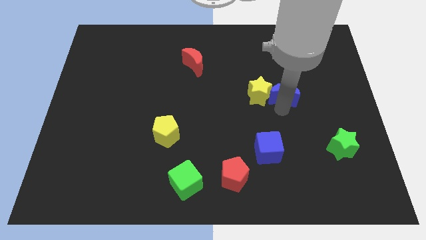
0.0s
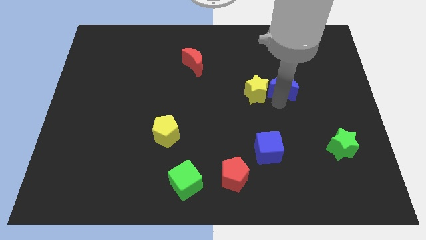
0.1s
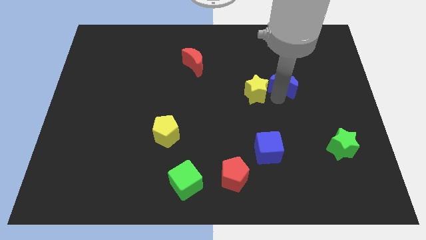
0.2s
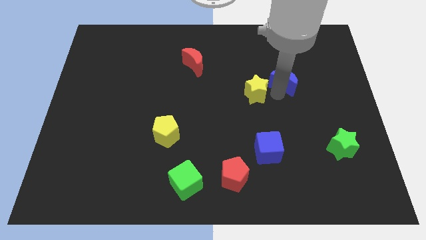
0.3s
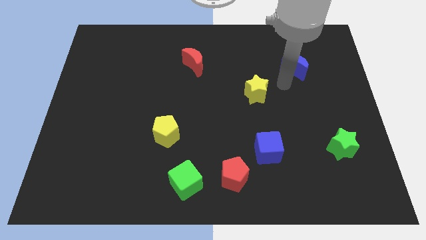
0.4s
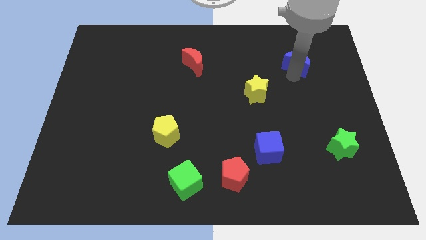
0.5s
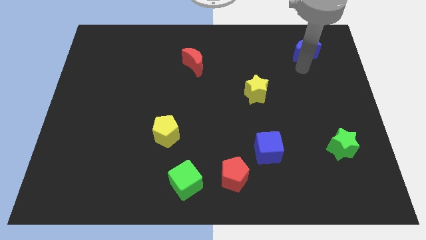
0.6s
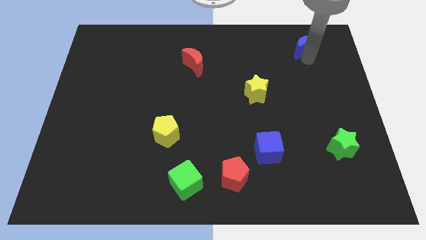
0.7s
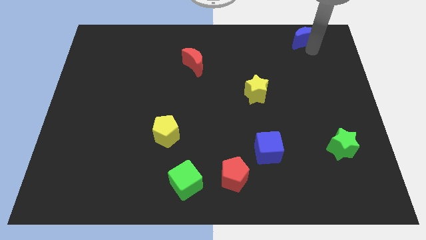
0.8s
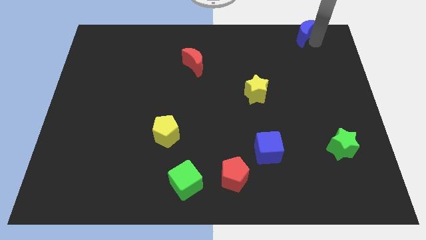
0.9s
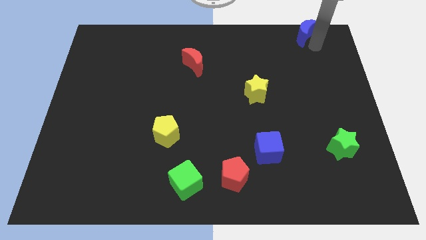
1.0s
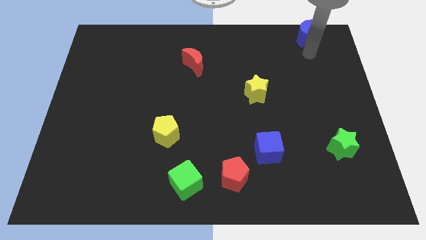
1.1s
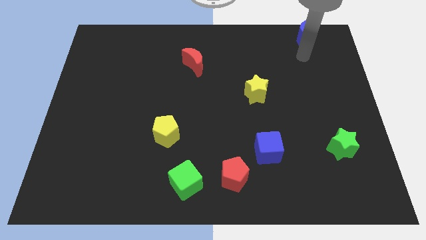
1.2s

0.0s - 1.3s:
move the blue crescent to the top right of the yellow star

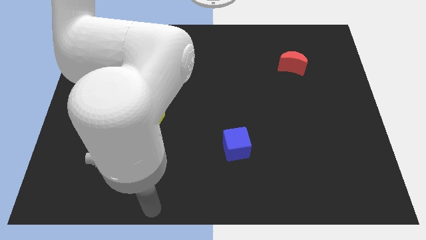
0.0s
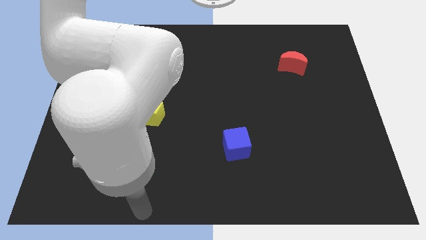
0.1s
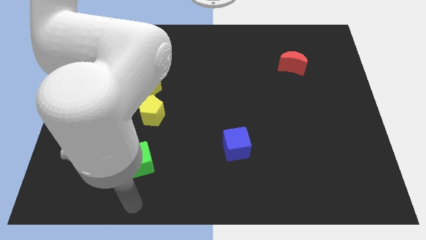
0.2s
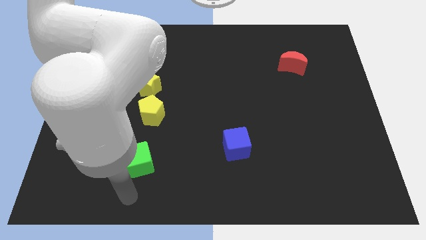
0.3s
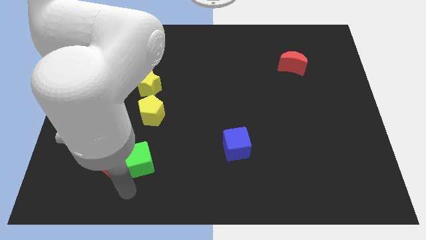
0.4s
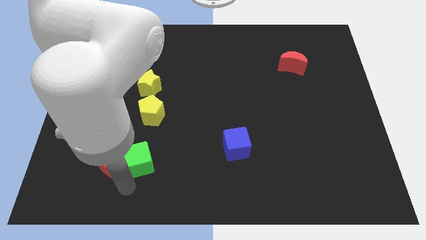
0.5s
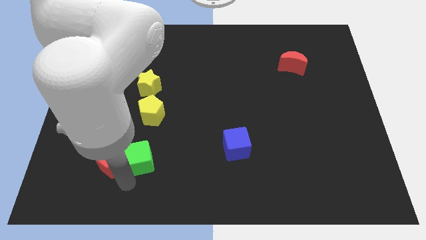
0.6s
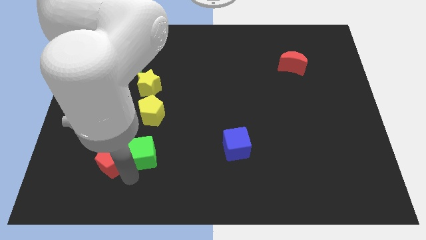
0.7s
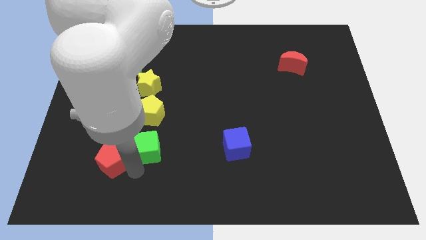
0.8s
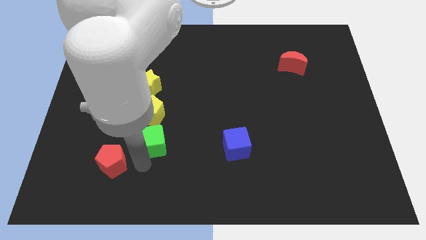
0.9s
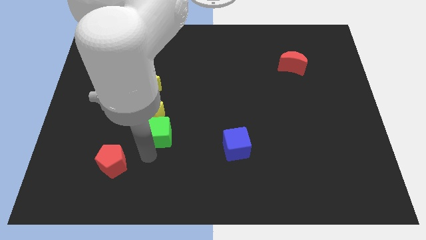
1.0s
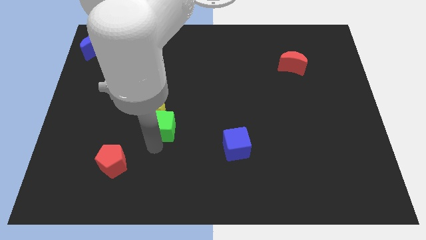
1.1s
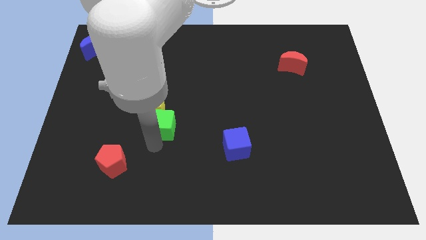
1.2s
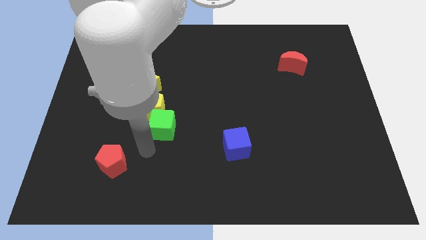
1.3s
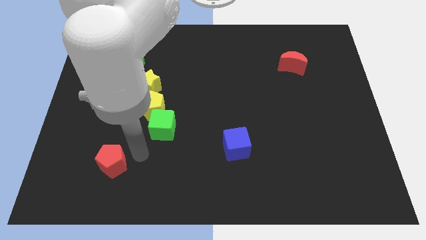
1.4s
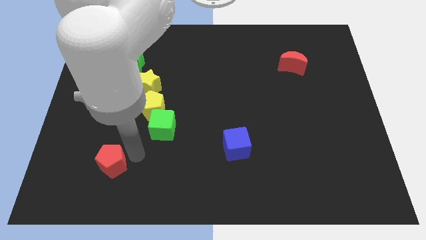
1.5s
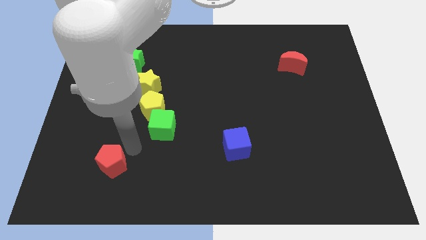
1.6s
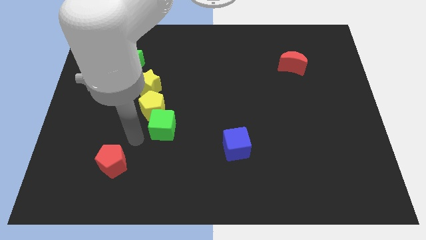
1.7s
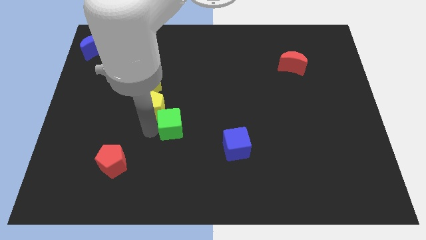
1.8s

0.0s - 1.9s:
move the green cube to the bottom of the yellow pentagon

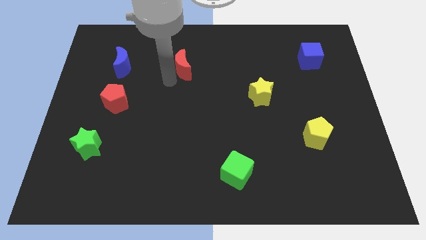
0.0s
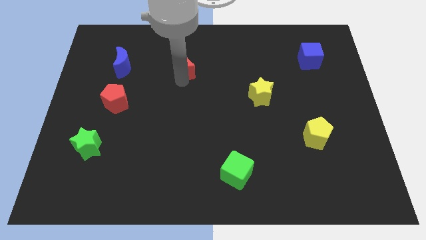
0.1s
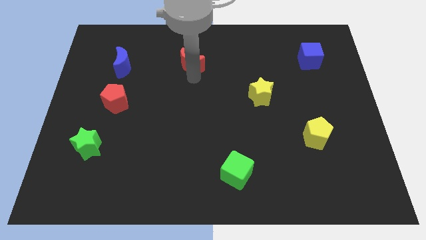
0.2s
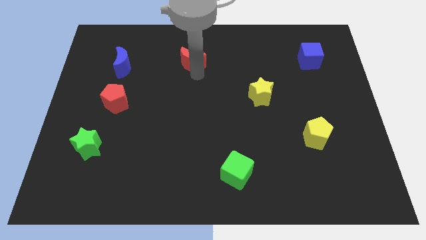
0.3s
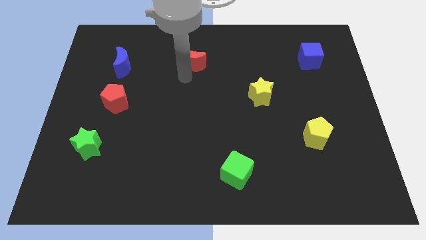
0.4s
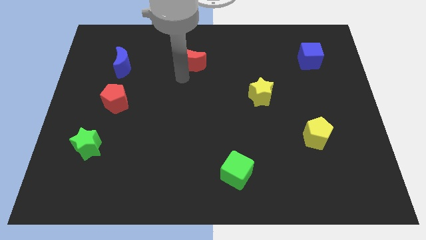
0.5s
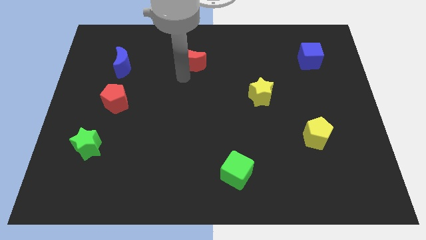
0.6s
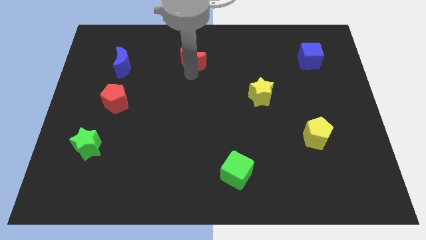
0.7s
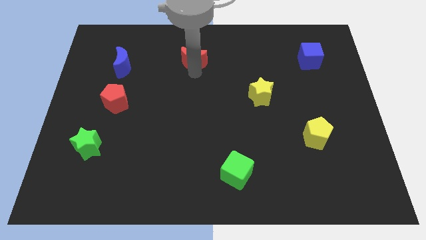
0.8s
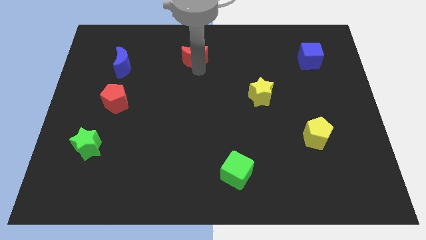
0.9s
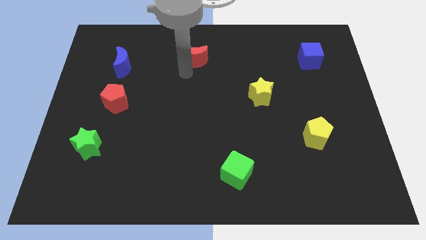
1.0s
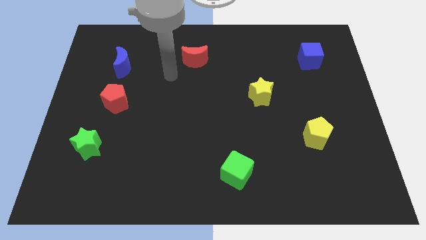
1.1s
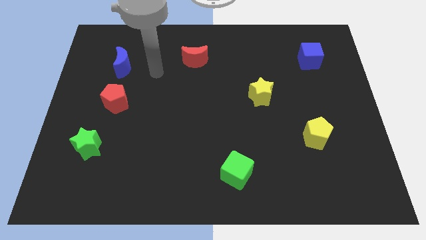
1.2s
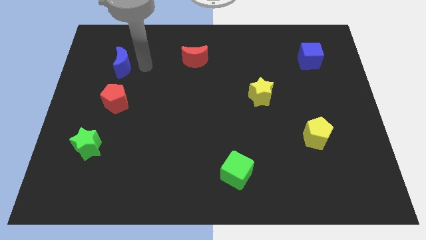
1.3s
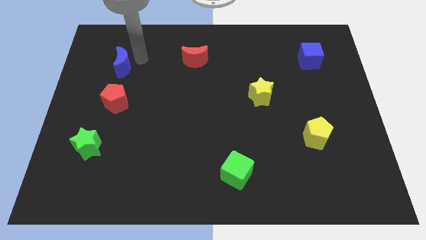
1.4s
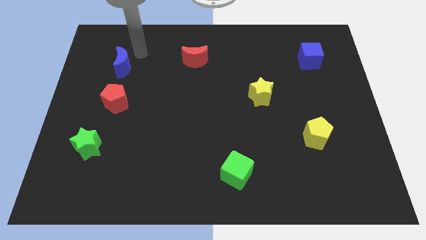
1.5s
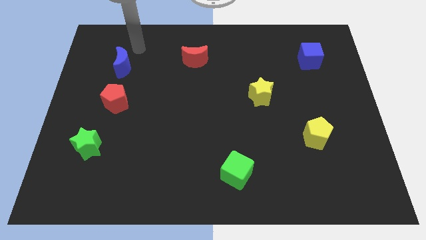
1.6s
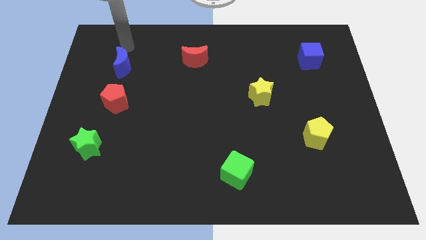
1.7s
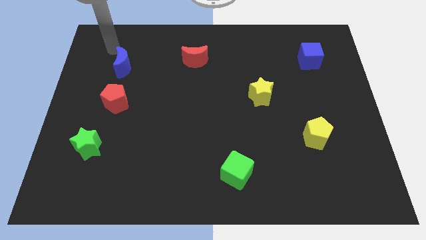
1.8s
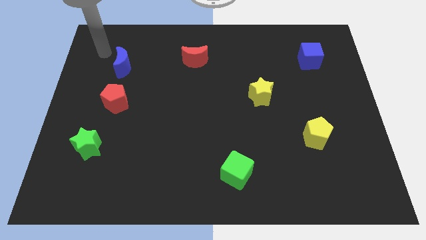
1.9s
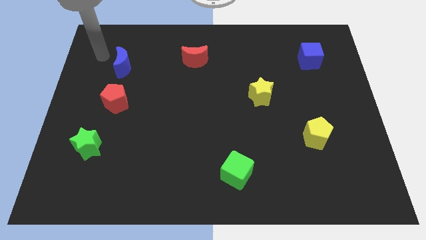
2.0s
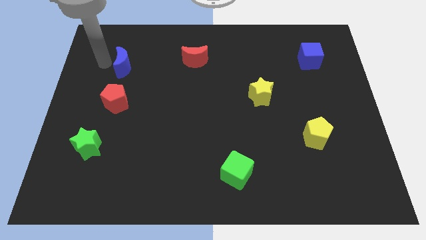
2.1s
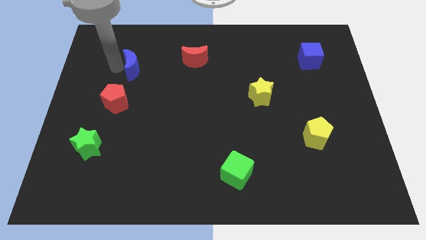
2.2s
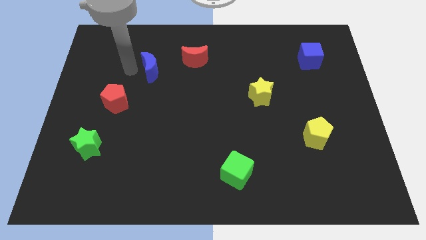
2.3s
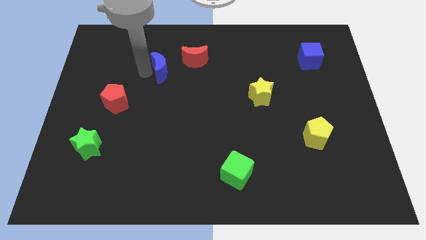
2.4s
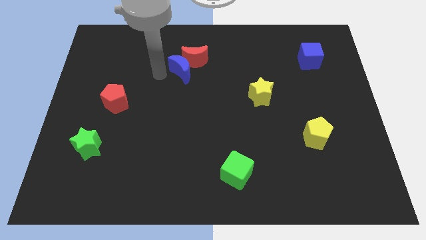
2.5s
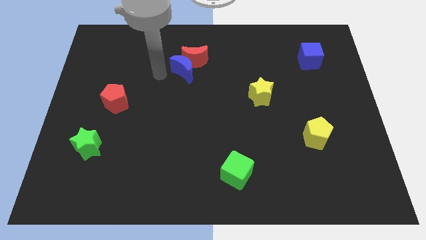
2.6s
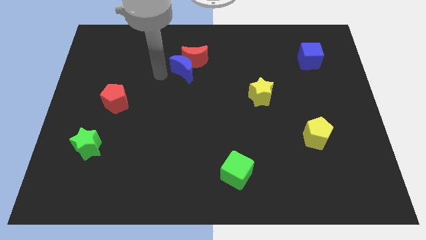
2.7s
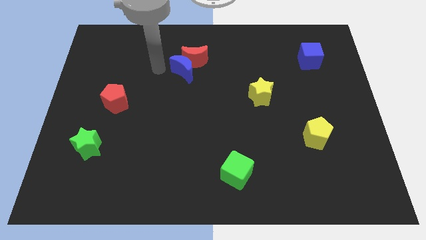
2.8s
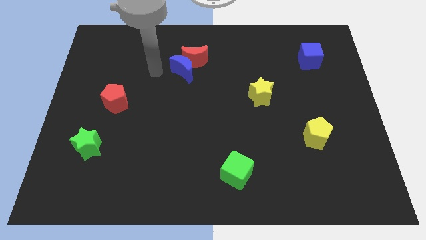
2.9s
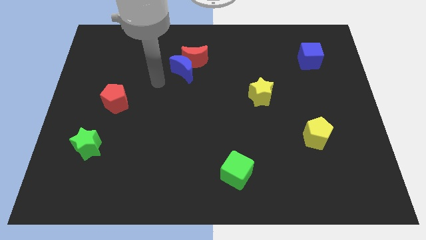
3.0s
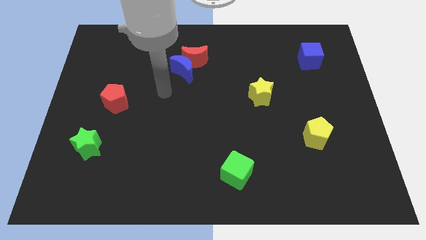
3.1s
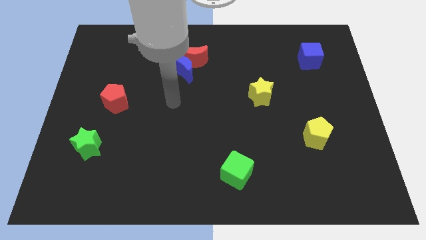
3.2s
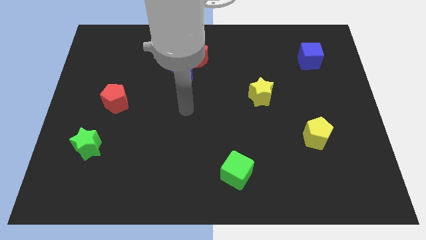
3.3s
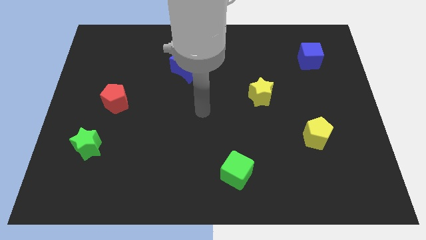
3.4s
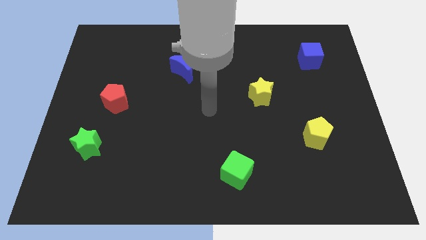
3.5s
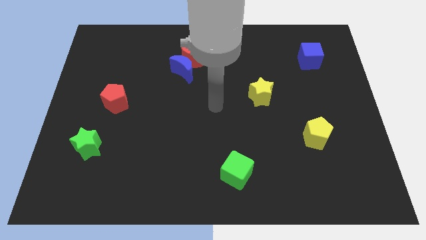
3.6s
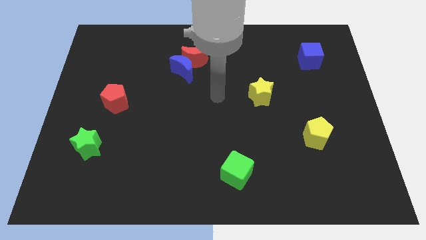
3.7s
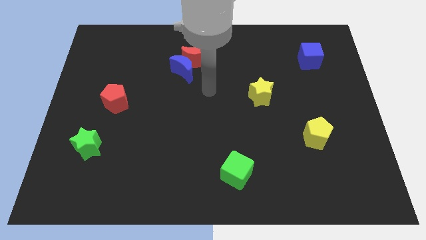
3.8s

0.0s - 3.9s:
move the blue semicircle to the bottom left side of the red moon

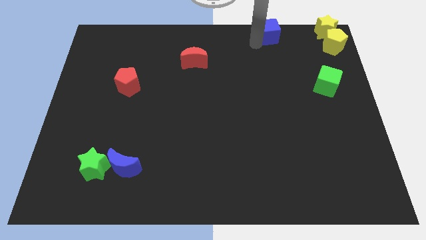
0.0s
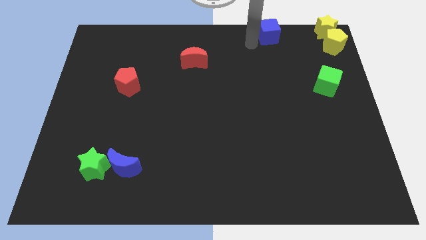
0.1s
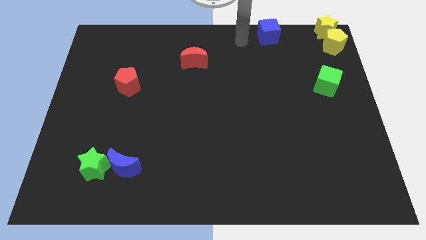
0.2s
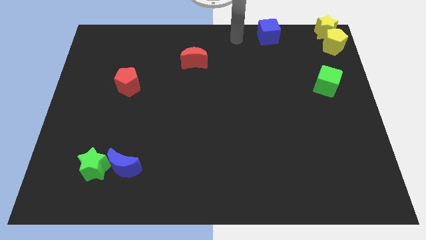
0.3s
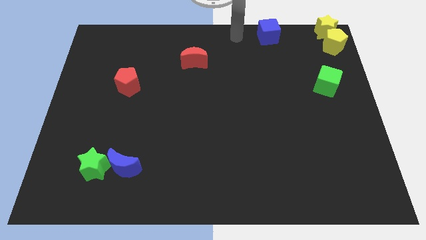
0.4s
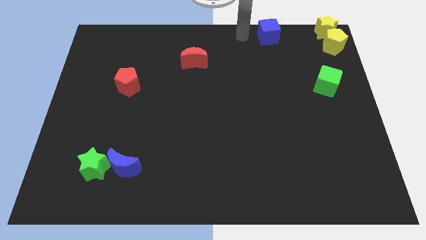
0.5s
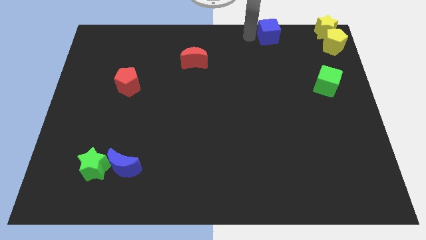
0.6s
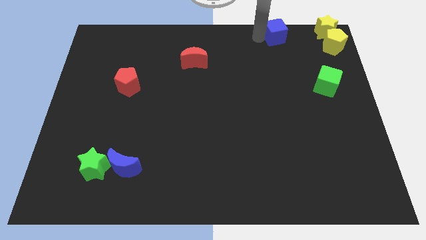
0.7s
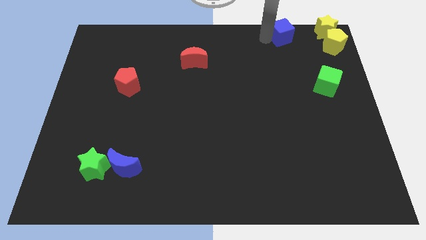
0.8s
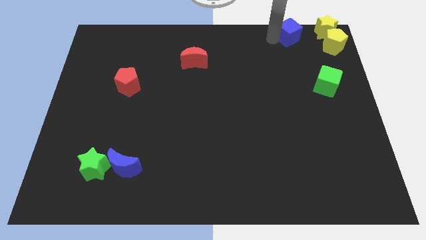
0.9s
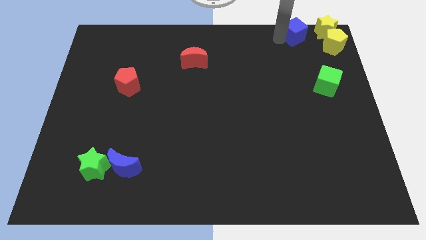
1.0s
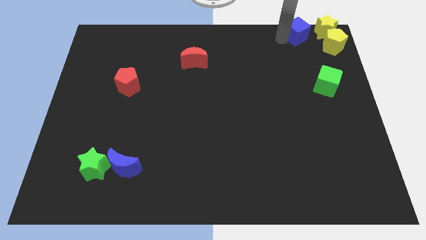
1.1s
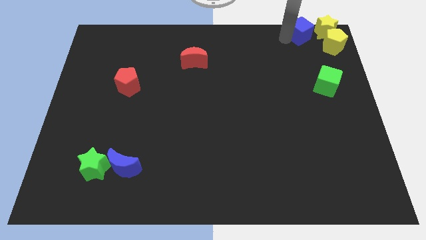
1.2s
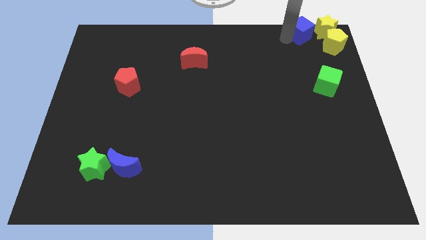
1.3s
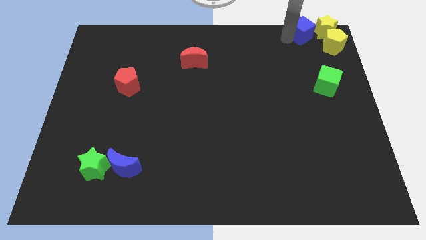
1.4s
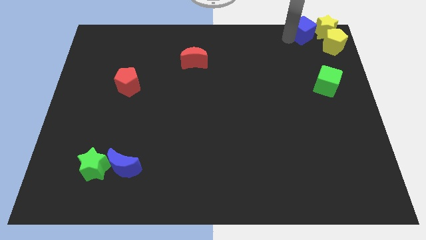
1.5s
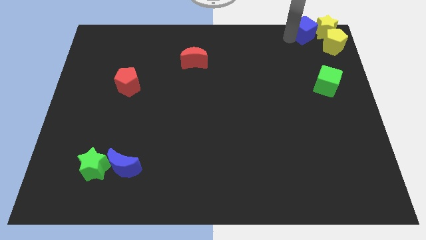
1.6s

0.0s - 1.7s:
put the blue cube at the left side of the yellow star

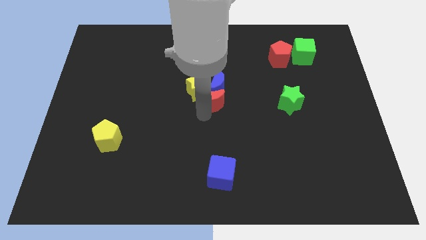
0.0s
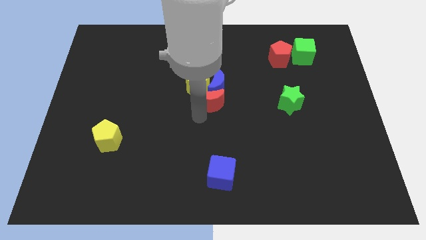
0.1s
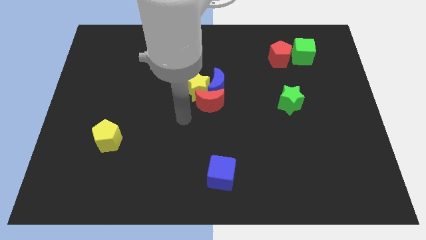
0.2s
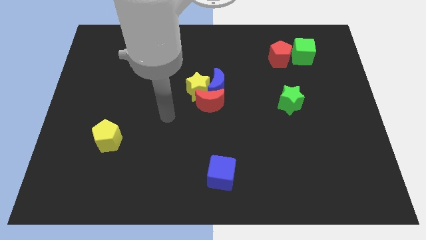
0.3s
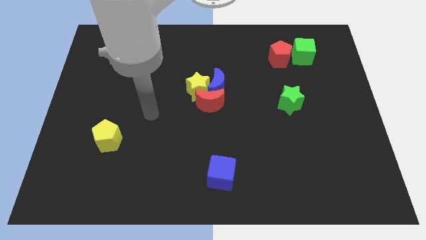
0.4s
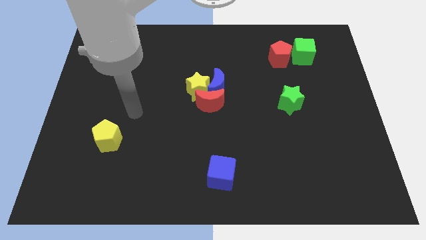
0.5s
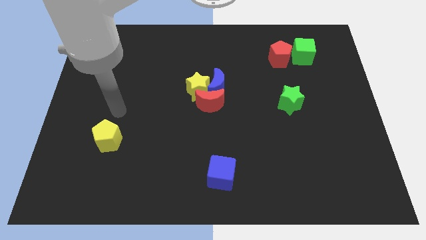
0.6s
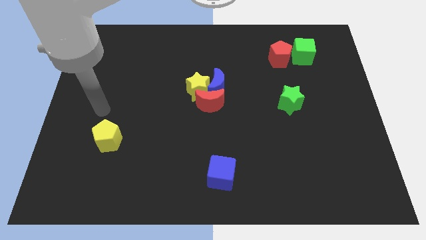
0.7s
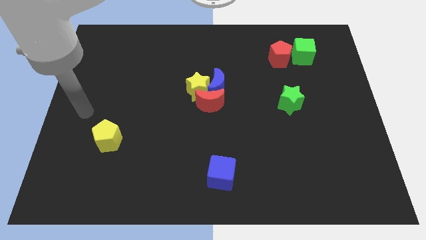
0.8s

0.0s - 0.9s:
move your arm away from the red moon
